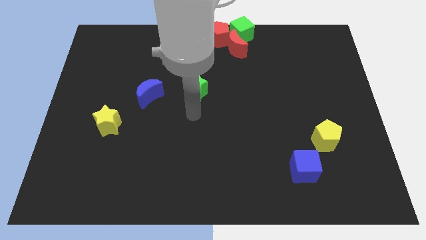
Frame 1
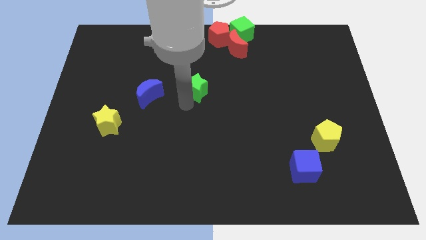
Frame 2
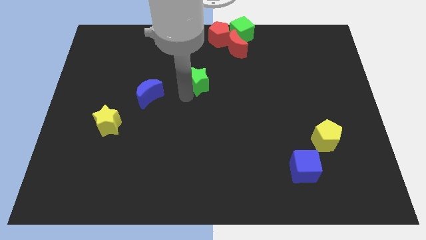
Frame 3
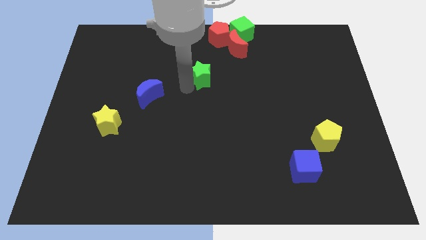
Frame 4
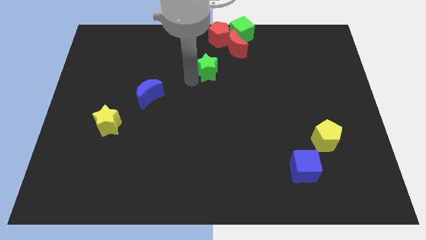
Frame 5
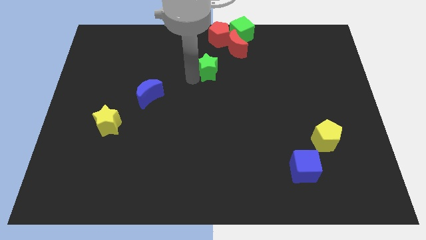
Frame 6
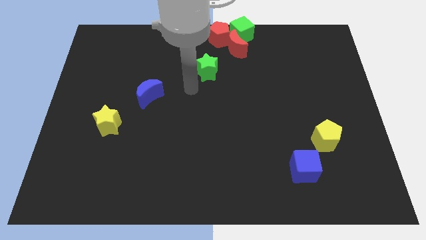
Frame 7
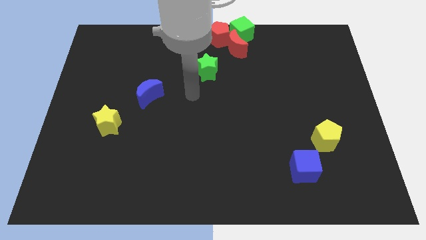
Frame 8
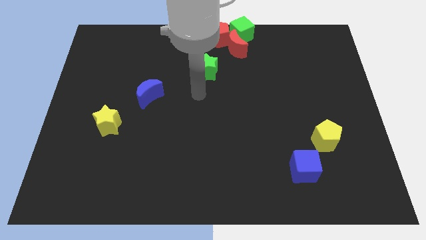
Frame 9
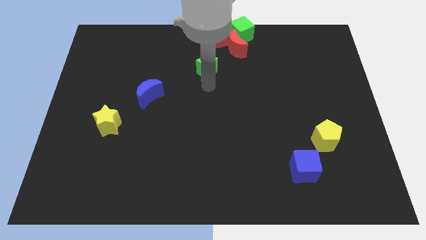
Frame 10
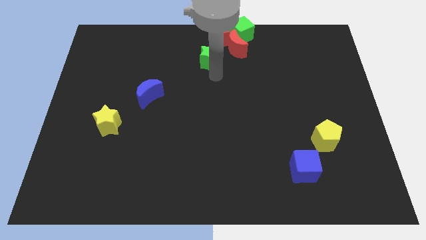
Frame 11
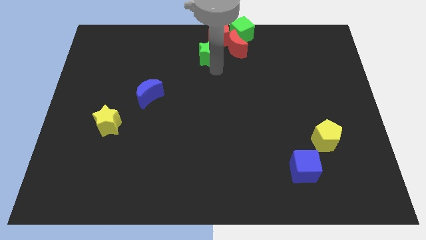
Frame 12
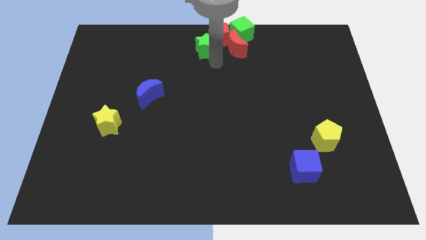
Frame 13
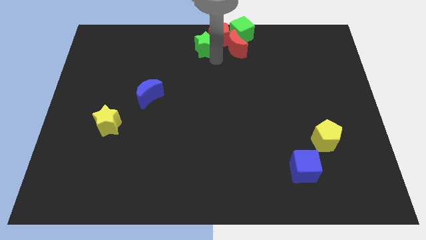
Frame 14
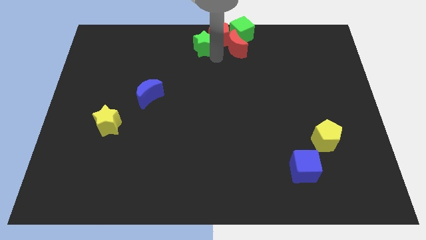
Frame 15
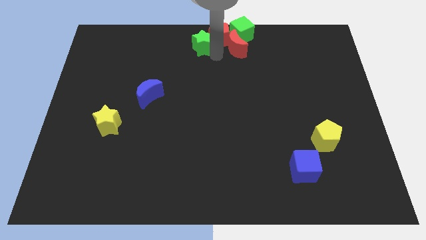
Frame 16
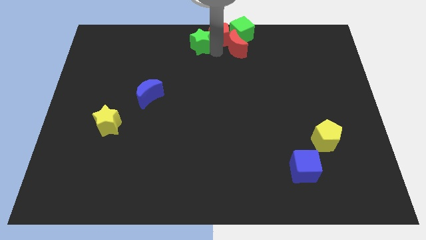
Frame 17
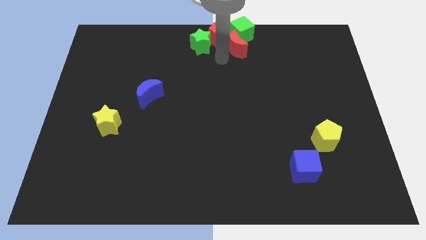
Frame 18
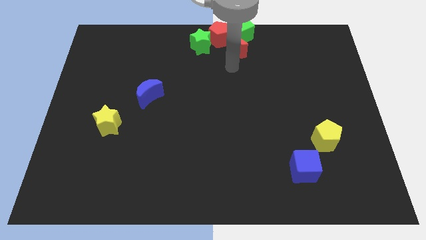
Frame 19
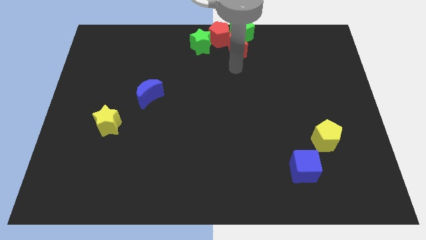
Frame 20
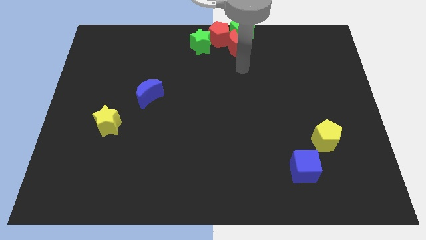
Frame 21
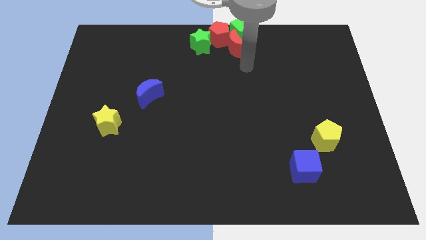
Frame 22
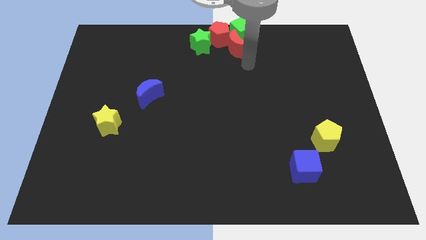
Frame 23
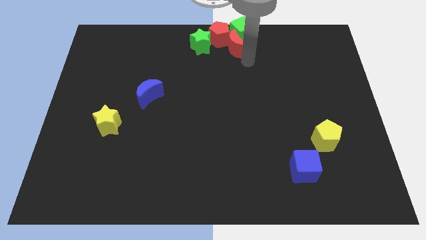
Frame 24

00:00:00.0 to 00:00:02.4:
slide the green star to the bottom left of red pentagon

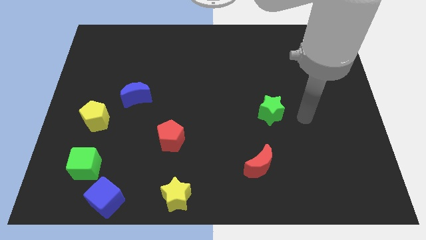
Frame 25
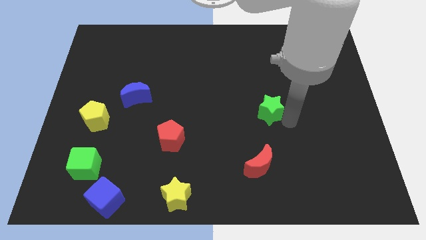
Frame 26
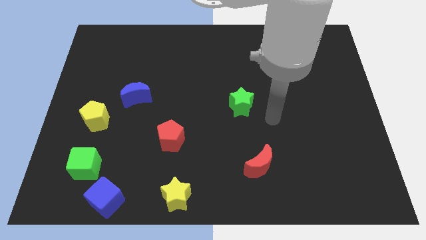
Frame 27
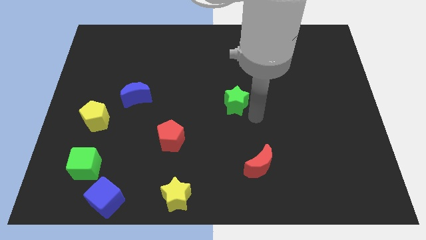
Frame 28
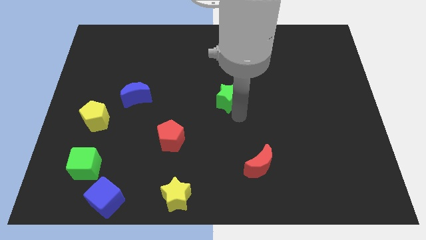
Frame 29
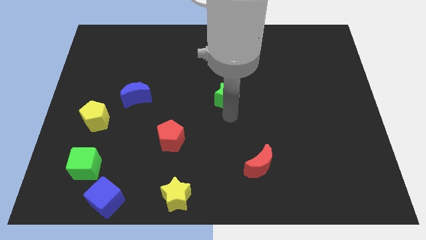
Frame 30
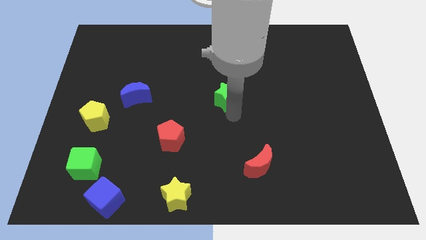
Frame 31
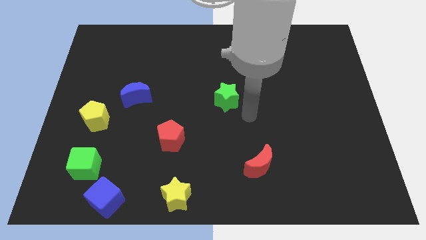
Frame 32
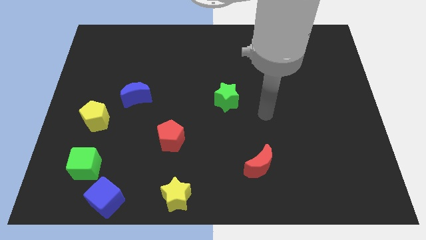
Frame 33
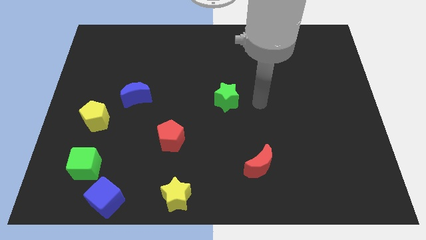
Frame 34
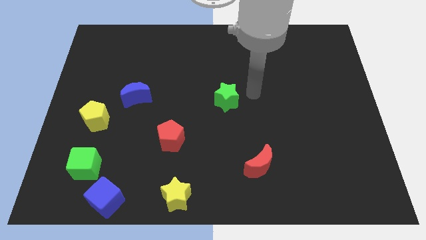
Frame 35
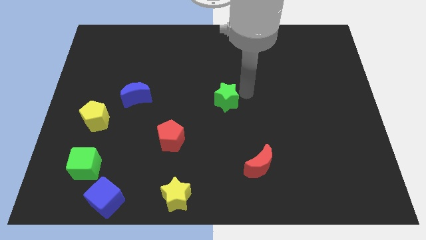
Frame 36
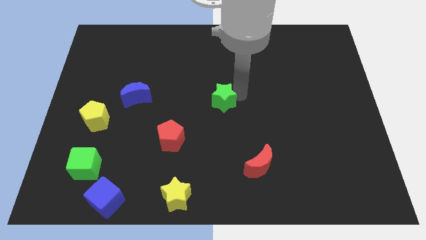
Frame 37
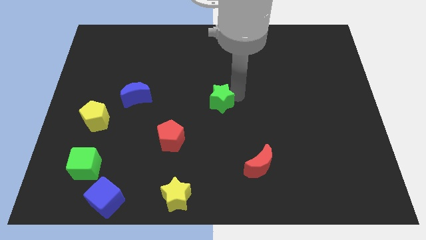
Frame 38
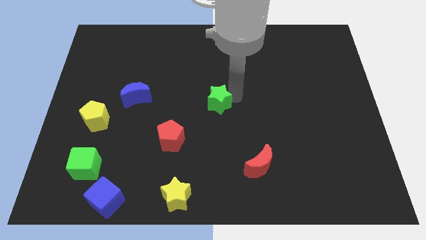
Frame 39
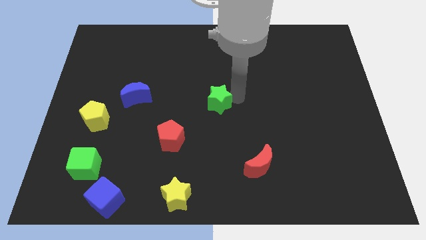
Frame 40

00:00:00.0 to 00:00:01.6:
place the green star to the center of board

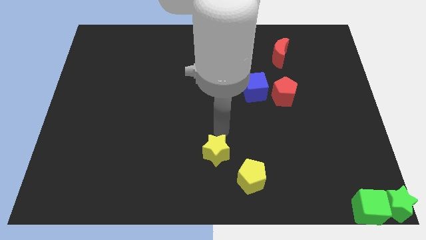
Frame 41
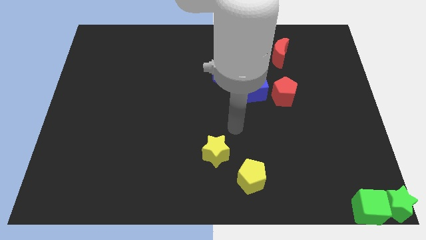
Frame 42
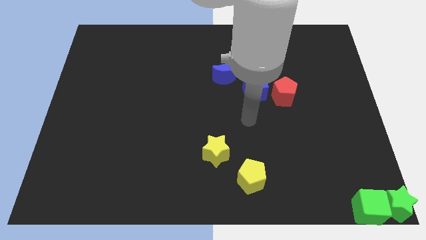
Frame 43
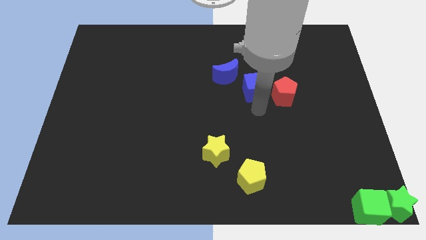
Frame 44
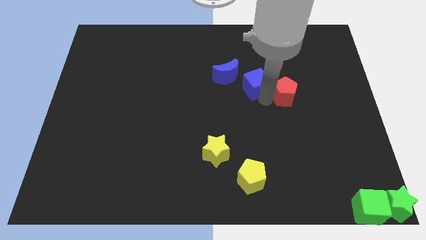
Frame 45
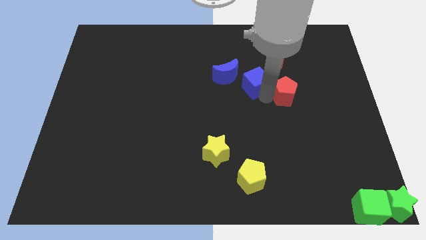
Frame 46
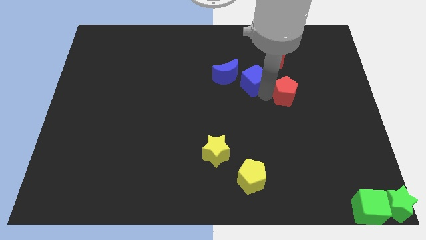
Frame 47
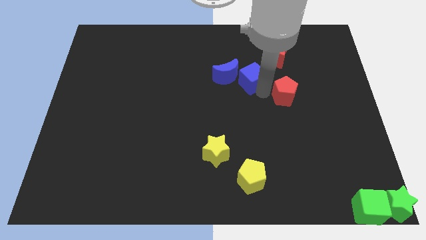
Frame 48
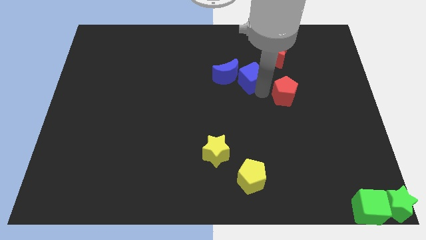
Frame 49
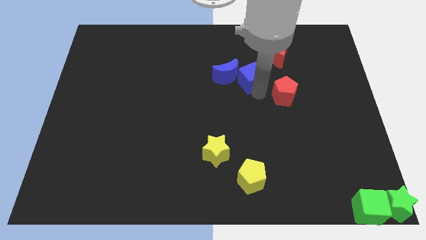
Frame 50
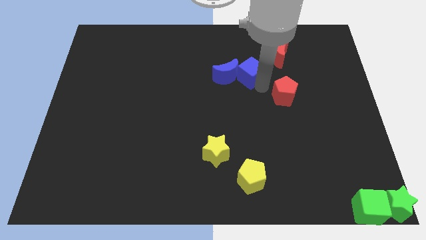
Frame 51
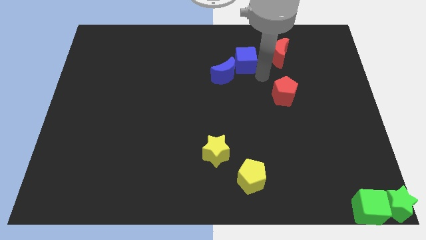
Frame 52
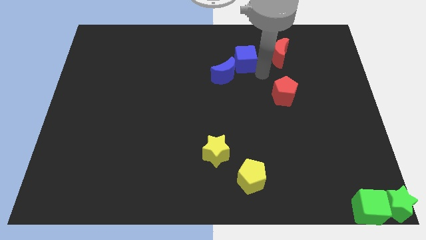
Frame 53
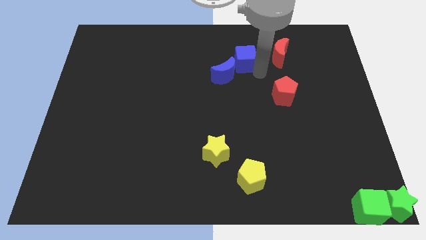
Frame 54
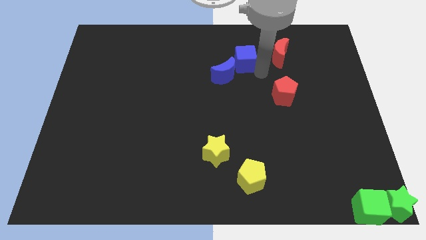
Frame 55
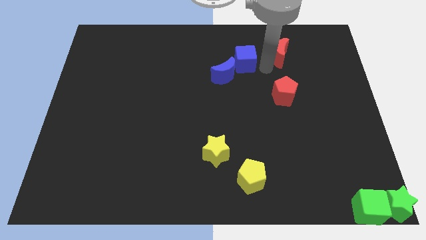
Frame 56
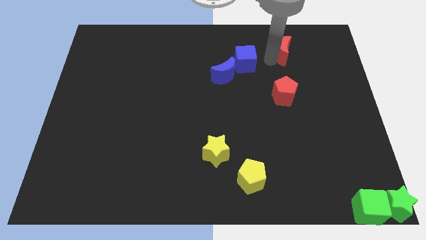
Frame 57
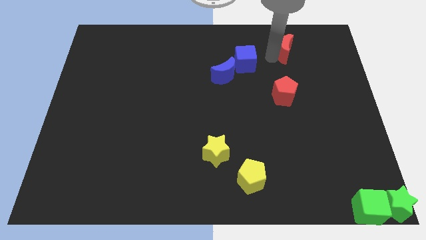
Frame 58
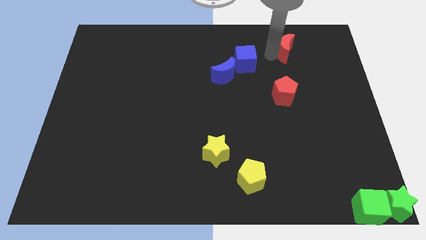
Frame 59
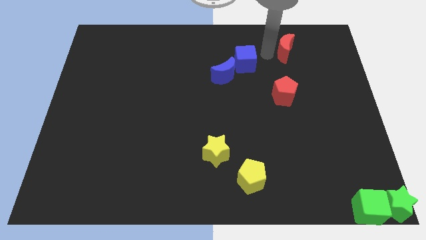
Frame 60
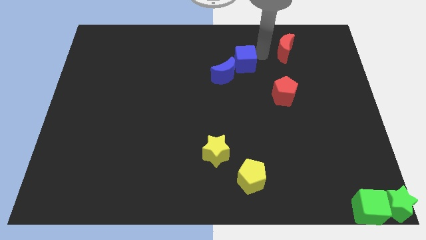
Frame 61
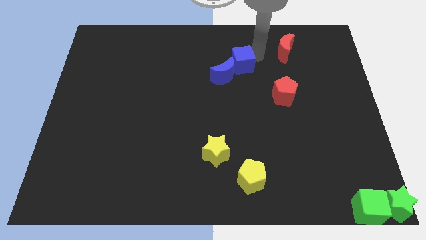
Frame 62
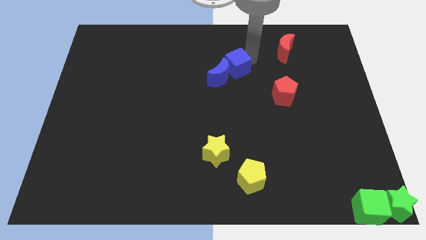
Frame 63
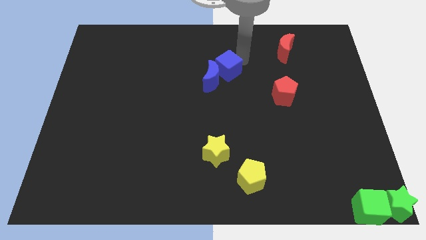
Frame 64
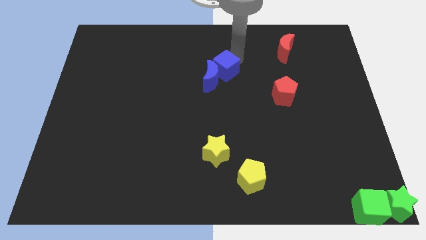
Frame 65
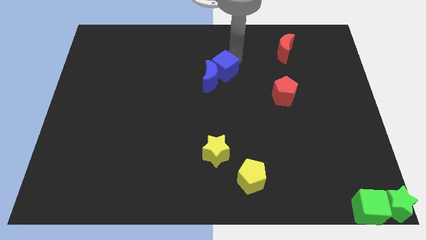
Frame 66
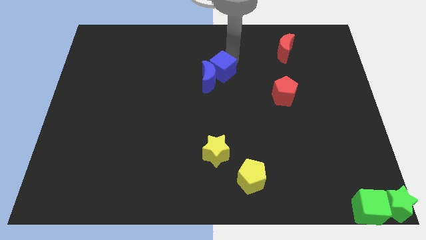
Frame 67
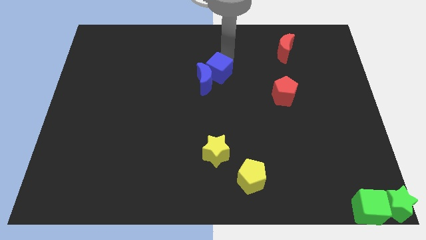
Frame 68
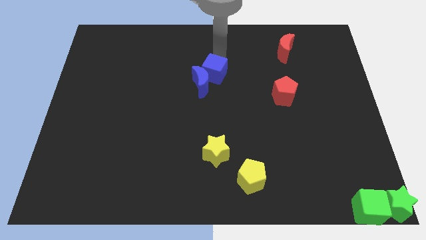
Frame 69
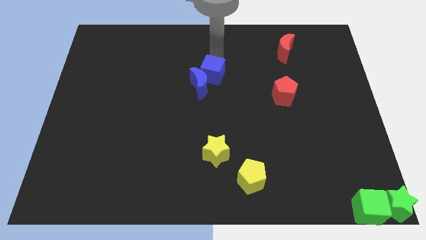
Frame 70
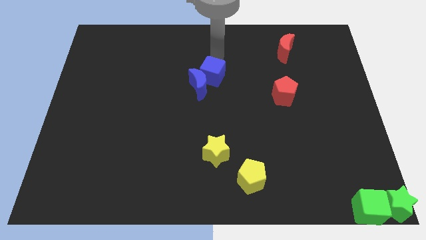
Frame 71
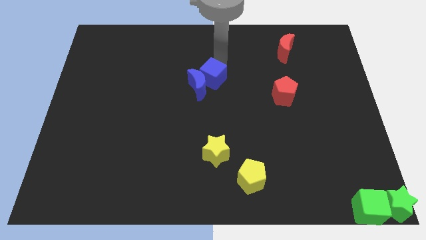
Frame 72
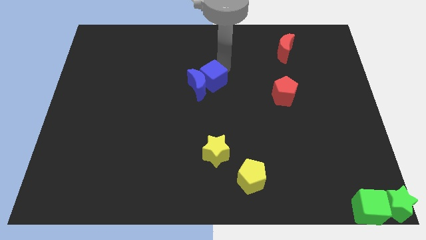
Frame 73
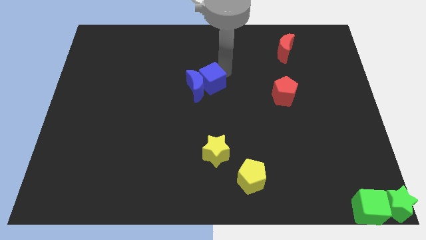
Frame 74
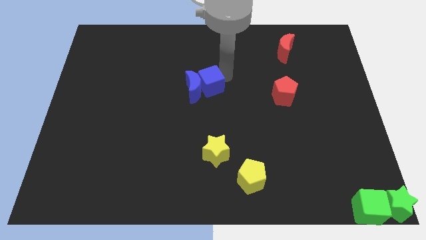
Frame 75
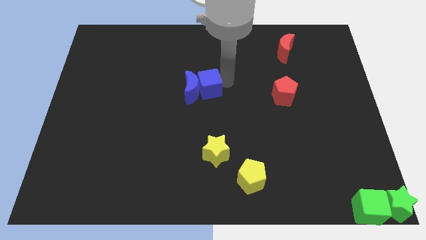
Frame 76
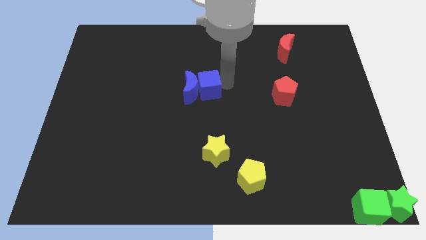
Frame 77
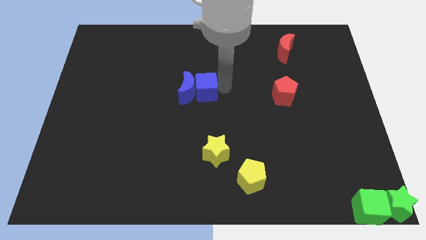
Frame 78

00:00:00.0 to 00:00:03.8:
push the blue blocks together to the left of the red pentagon

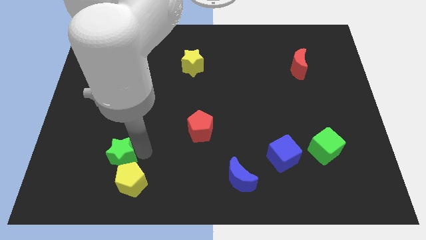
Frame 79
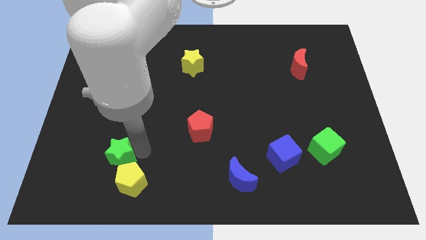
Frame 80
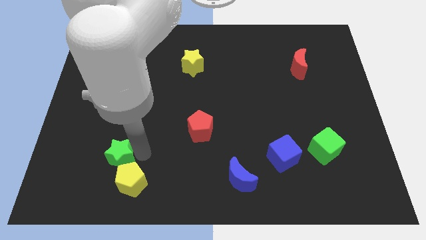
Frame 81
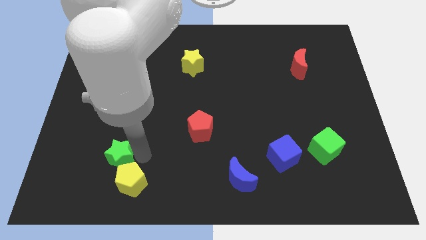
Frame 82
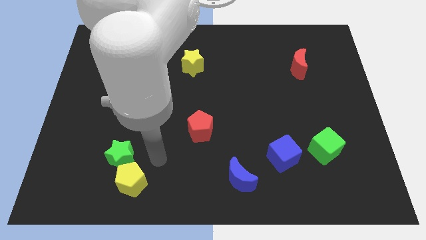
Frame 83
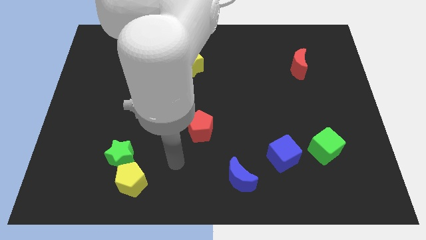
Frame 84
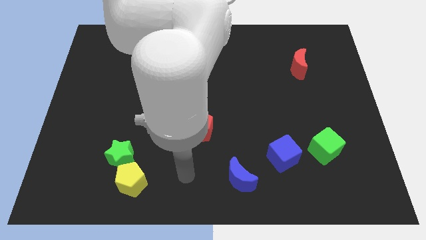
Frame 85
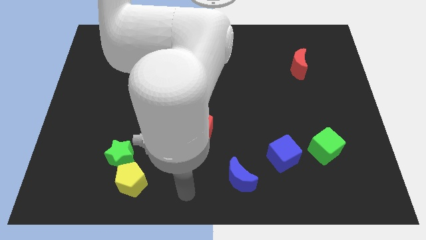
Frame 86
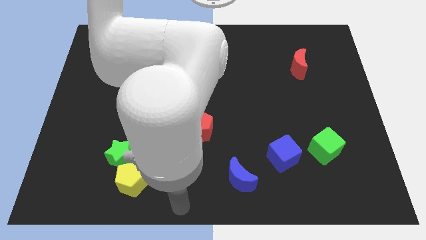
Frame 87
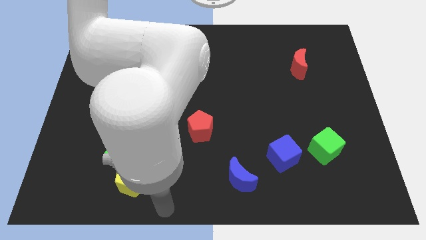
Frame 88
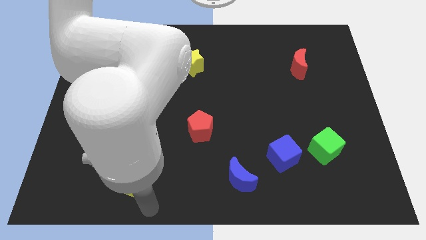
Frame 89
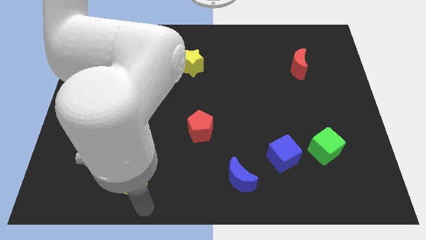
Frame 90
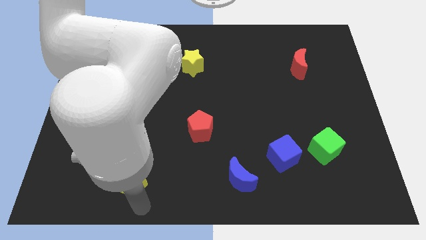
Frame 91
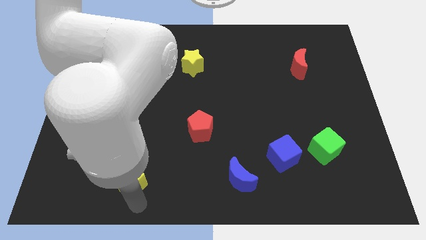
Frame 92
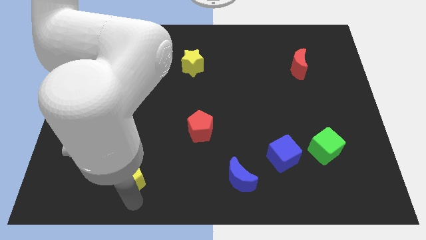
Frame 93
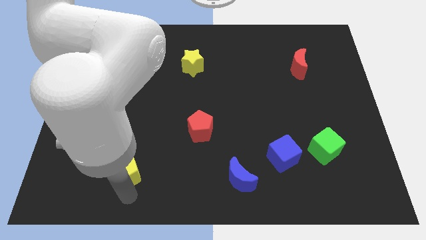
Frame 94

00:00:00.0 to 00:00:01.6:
place your arm to the bottom side of the yellow pentagon
